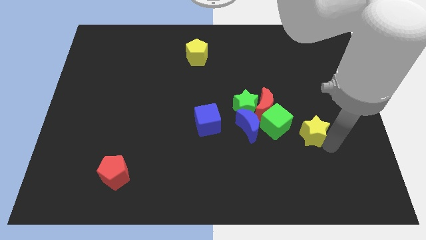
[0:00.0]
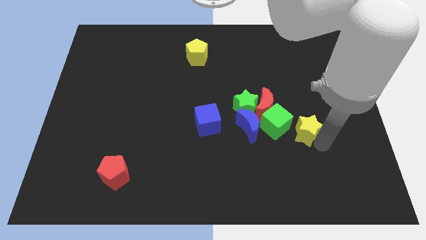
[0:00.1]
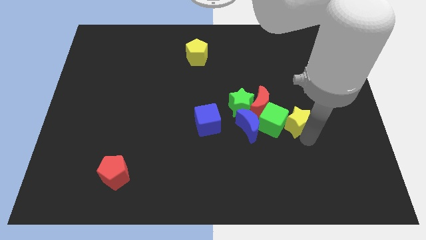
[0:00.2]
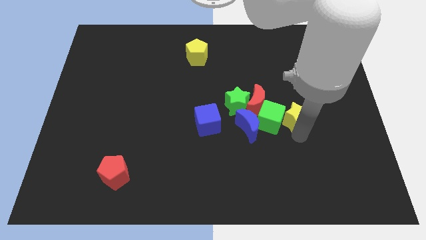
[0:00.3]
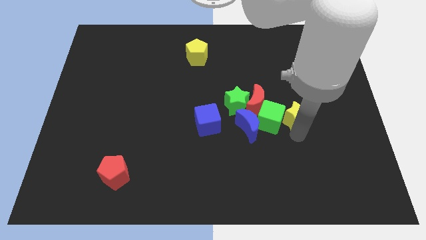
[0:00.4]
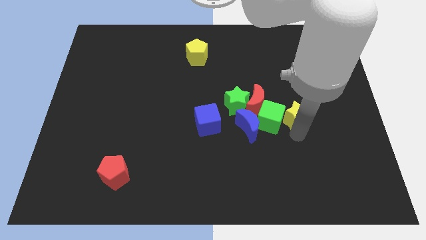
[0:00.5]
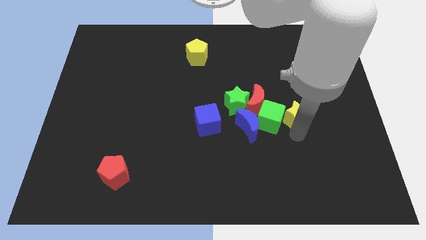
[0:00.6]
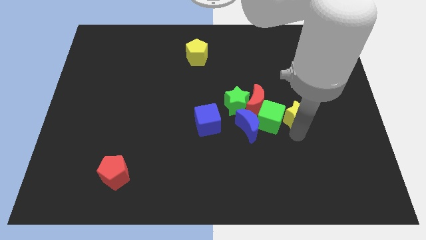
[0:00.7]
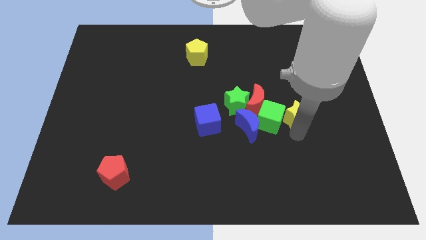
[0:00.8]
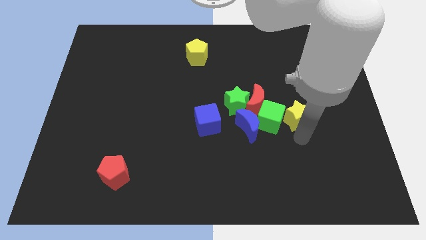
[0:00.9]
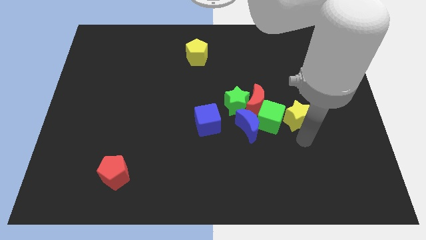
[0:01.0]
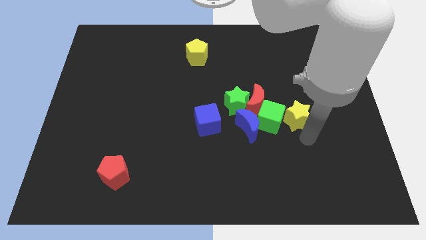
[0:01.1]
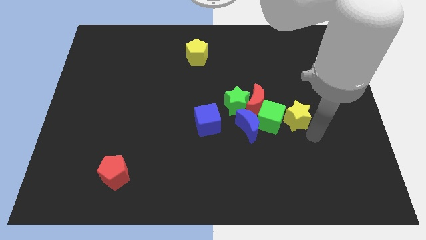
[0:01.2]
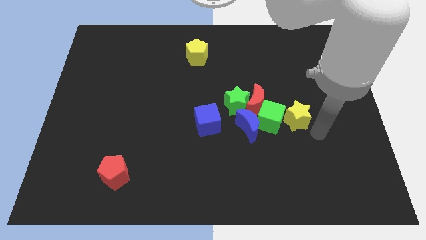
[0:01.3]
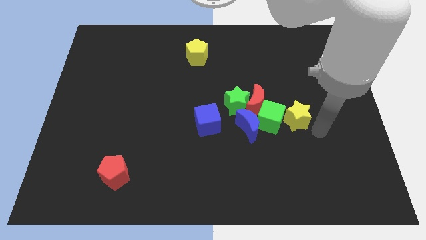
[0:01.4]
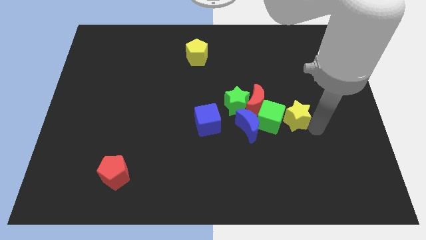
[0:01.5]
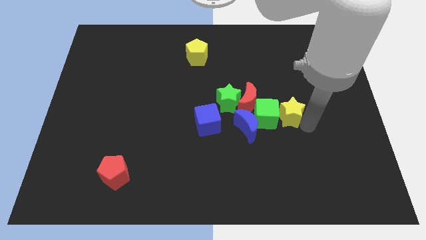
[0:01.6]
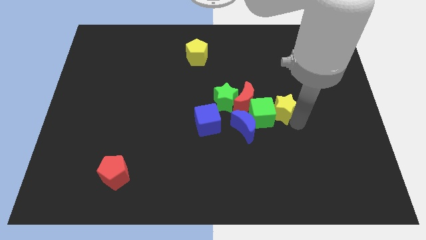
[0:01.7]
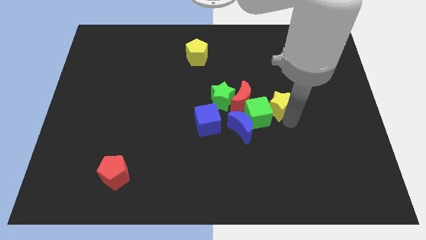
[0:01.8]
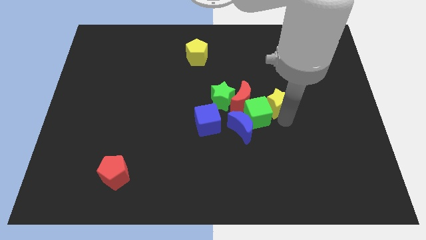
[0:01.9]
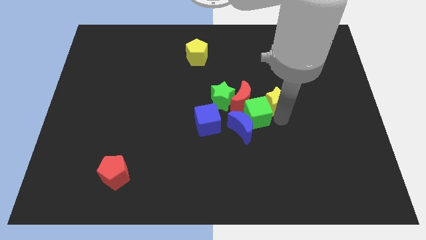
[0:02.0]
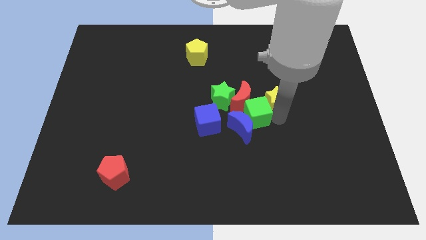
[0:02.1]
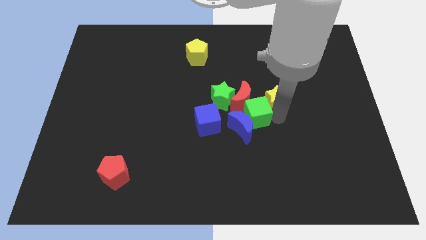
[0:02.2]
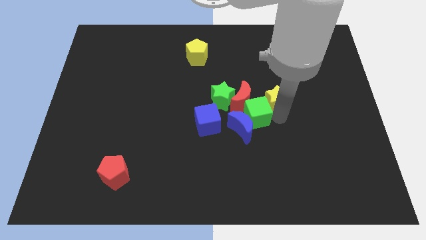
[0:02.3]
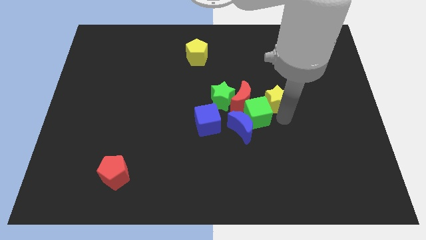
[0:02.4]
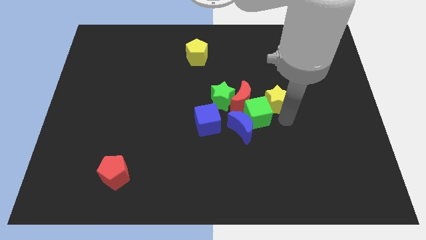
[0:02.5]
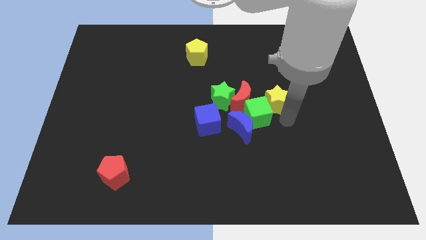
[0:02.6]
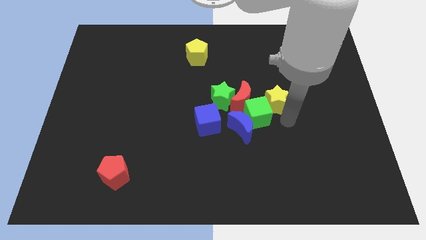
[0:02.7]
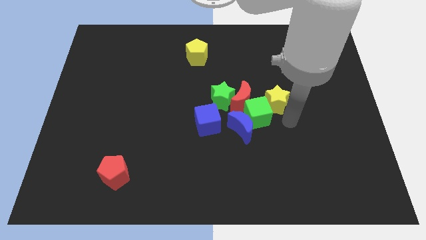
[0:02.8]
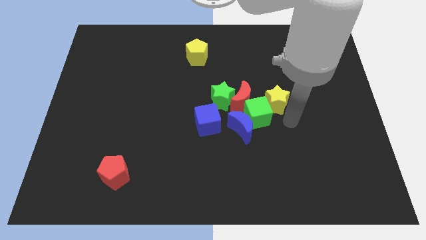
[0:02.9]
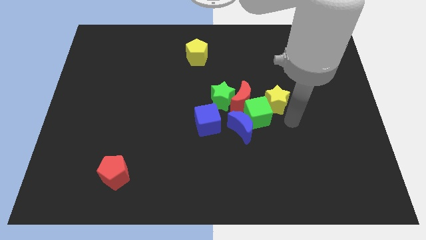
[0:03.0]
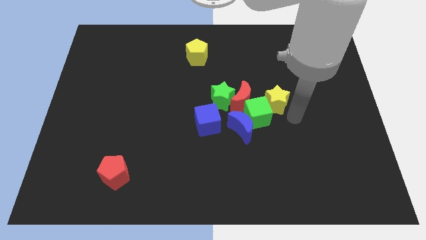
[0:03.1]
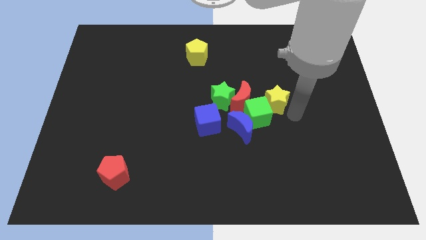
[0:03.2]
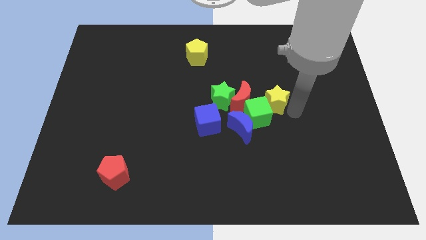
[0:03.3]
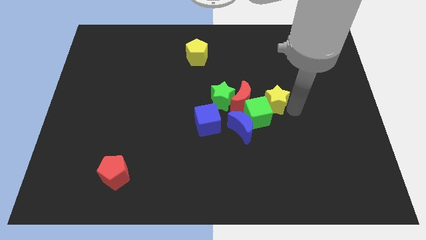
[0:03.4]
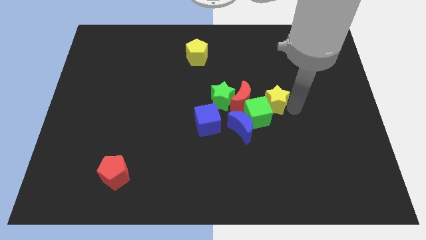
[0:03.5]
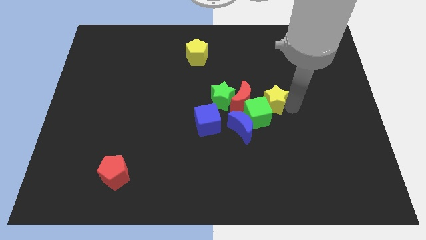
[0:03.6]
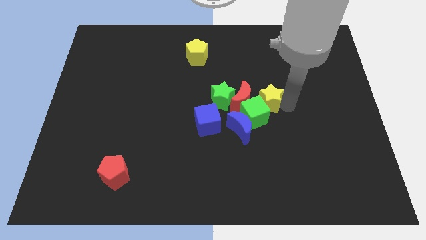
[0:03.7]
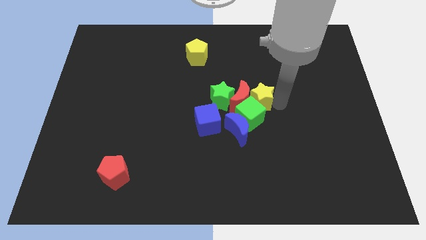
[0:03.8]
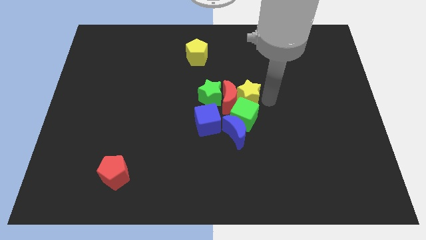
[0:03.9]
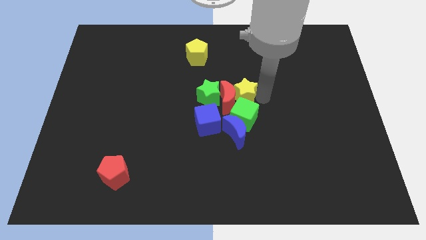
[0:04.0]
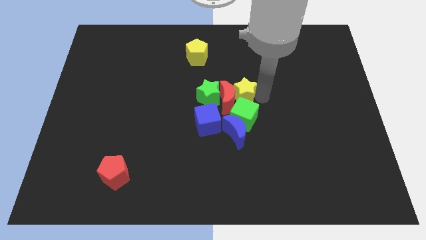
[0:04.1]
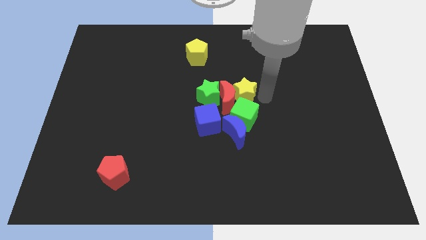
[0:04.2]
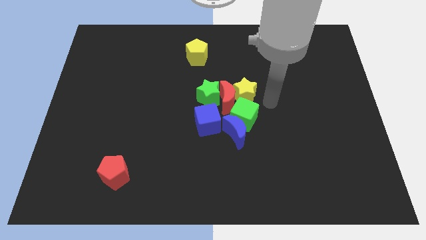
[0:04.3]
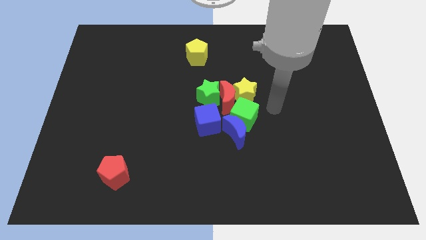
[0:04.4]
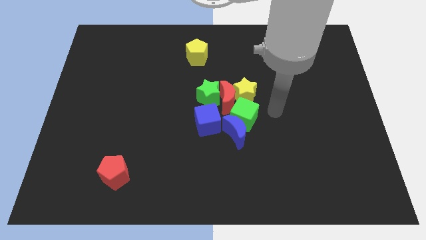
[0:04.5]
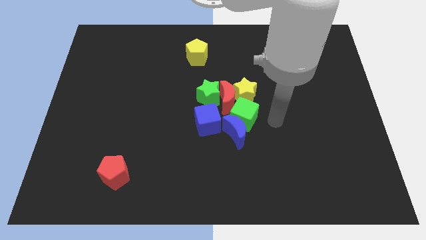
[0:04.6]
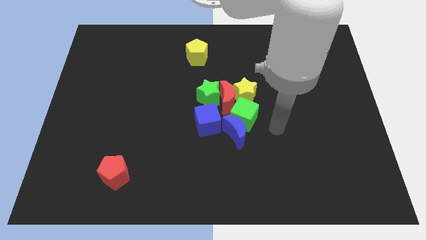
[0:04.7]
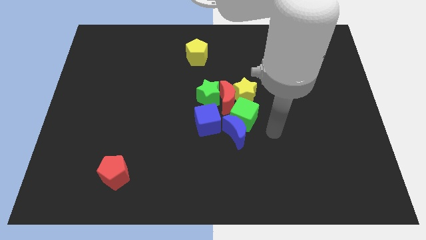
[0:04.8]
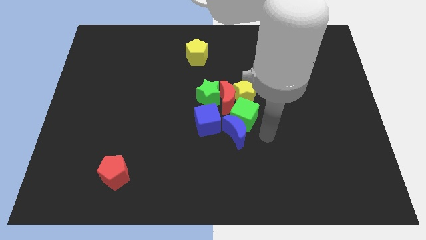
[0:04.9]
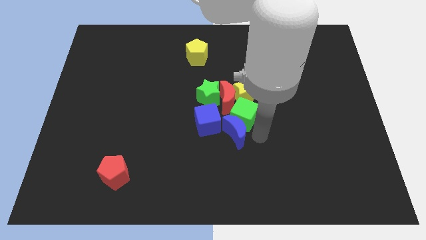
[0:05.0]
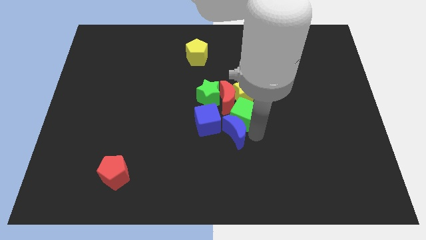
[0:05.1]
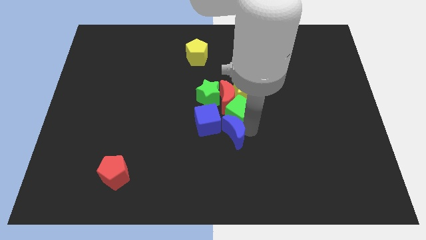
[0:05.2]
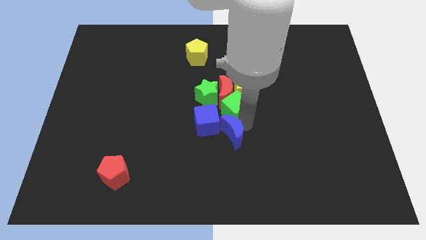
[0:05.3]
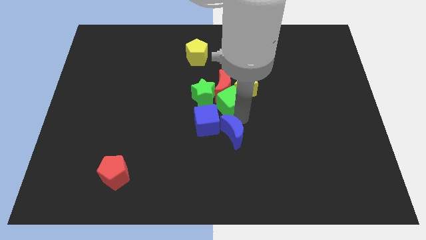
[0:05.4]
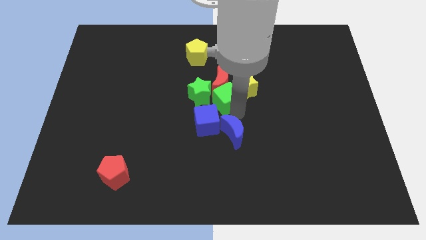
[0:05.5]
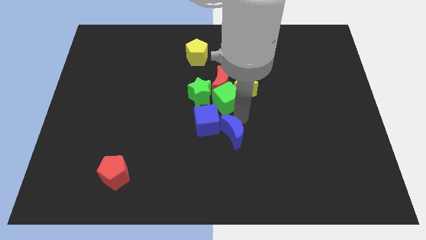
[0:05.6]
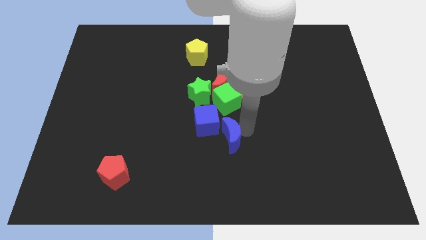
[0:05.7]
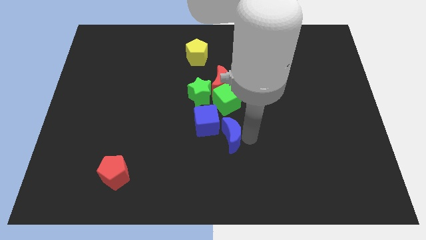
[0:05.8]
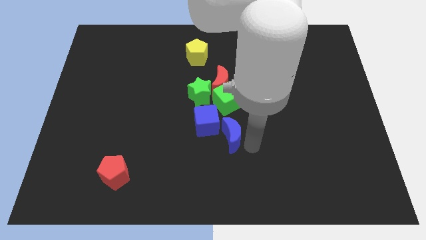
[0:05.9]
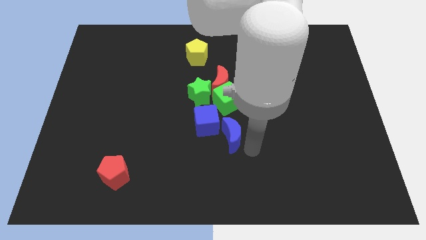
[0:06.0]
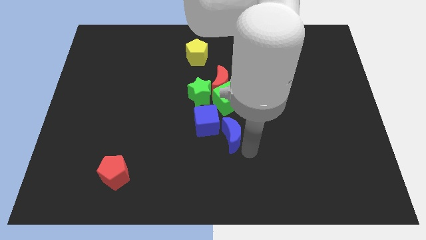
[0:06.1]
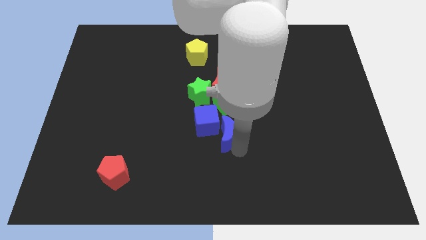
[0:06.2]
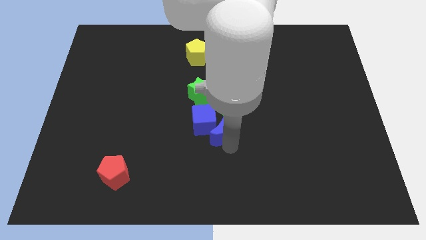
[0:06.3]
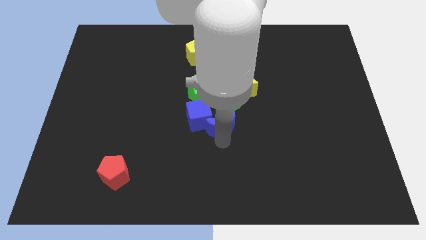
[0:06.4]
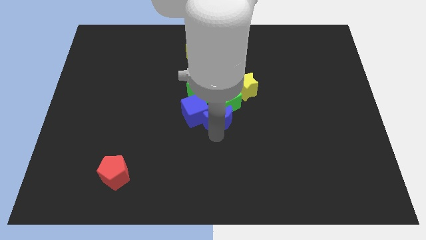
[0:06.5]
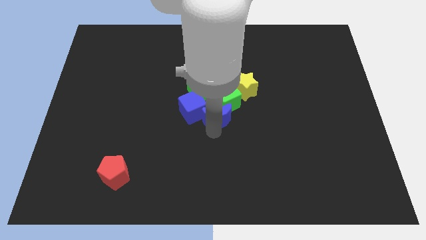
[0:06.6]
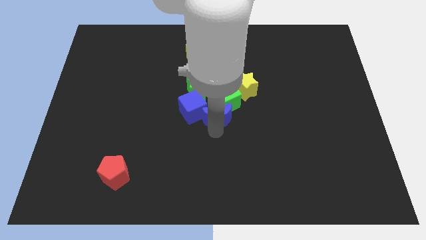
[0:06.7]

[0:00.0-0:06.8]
push the blue moon towards the center of the board

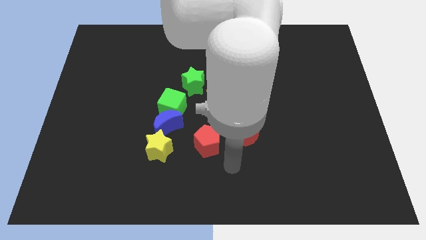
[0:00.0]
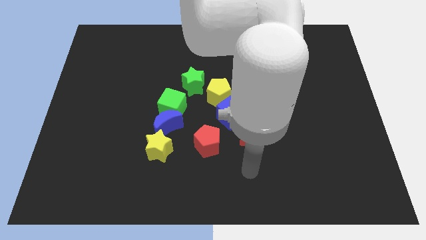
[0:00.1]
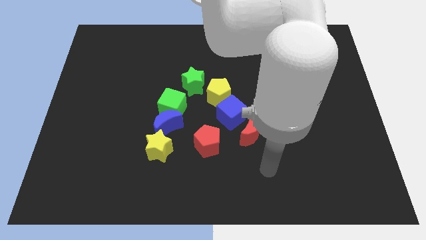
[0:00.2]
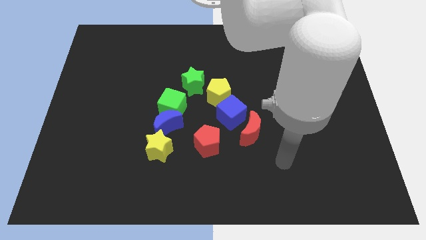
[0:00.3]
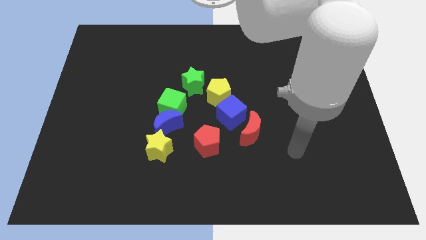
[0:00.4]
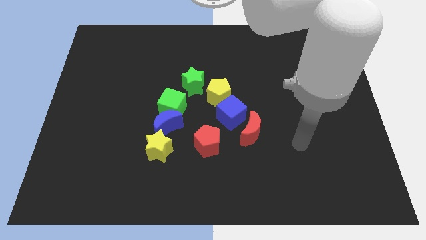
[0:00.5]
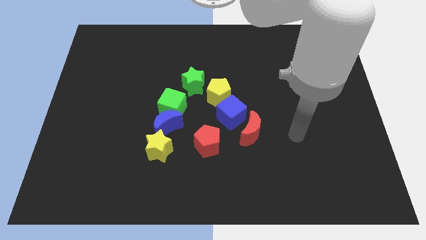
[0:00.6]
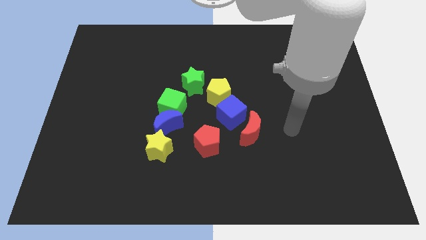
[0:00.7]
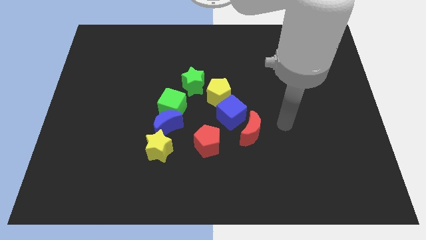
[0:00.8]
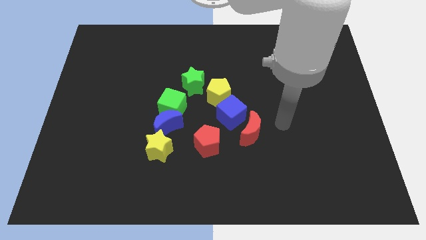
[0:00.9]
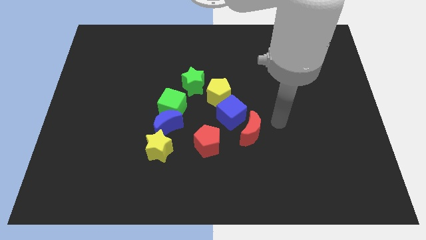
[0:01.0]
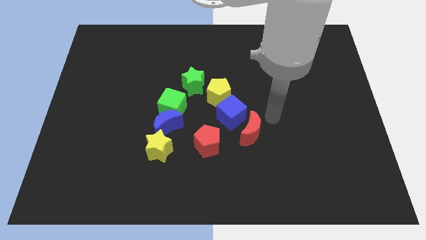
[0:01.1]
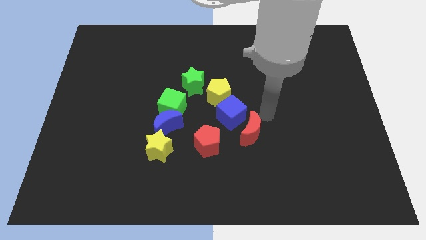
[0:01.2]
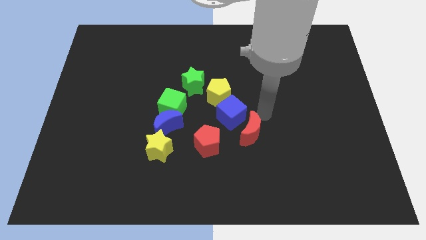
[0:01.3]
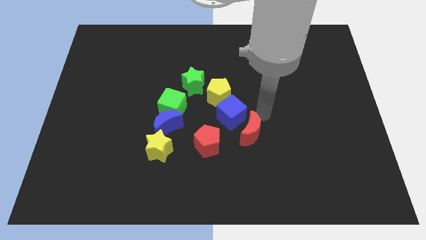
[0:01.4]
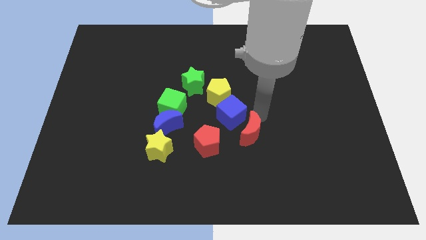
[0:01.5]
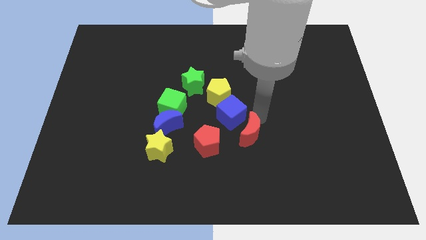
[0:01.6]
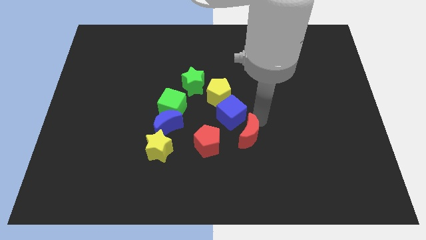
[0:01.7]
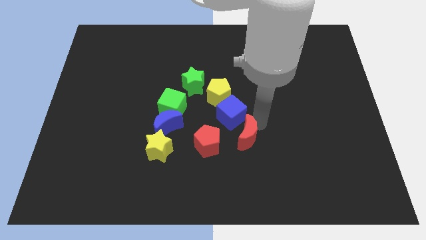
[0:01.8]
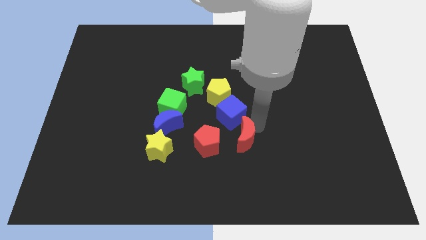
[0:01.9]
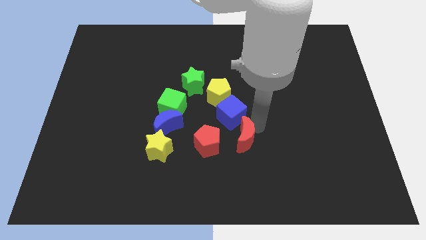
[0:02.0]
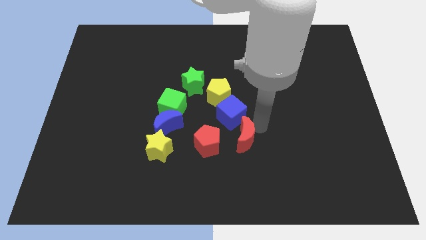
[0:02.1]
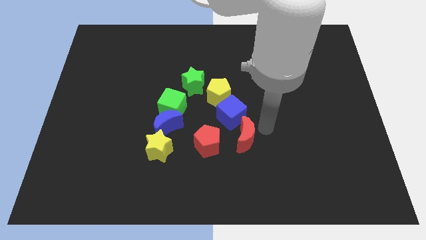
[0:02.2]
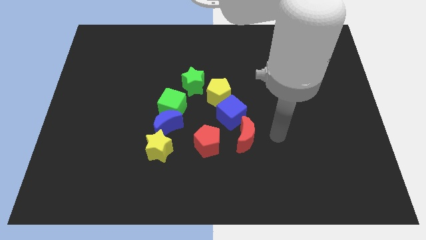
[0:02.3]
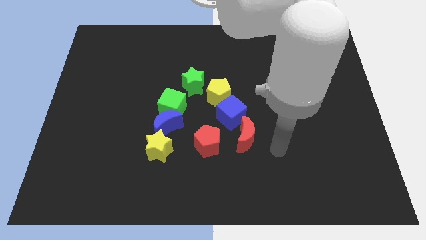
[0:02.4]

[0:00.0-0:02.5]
move the red crescent slightly to the bottom
